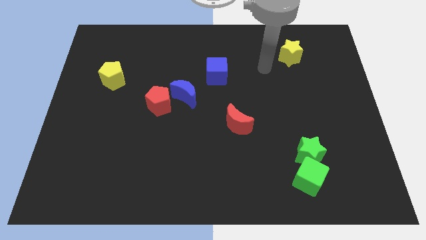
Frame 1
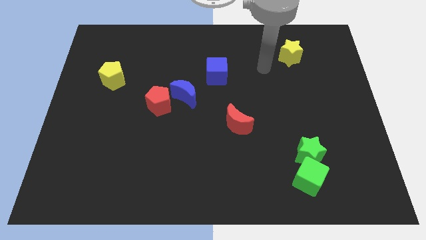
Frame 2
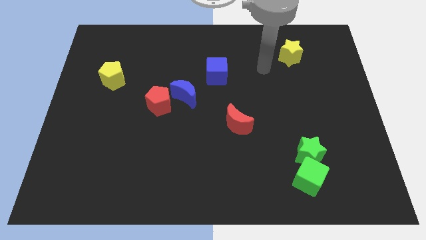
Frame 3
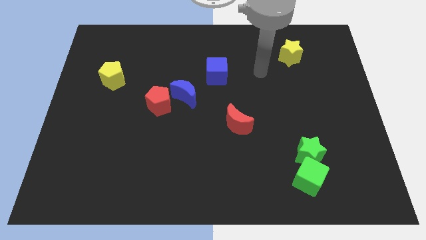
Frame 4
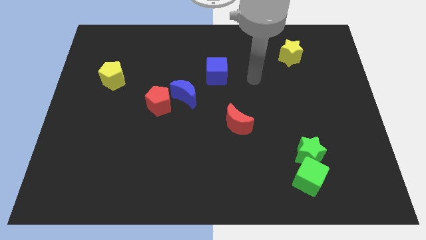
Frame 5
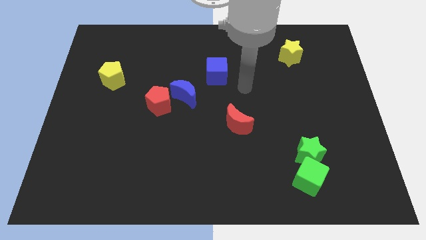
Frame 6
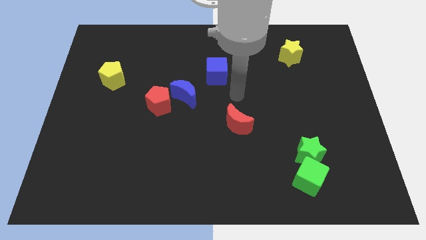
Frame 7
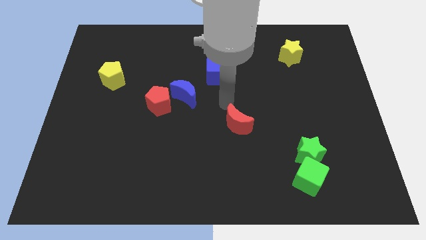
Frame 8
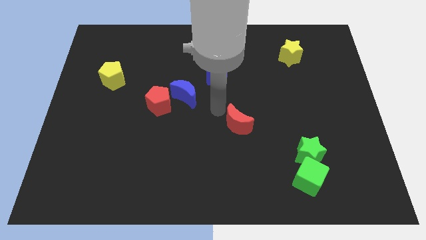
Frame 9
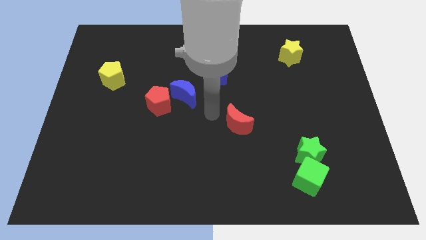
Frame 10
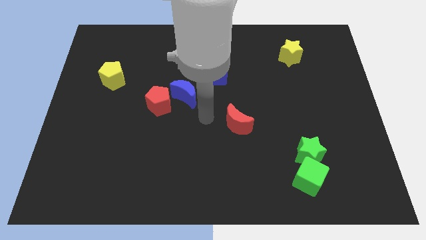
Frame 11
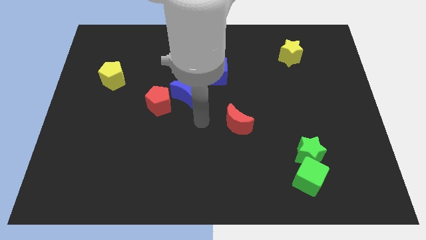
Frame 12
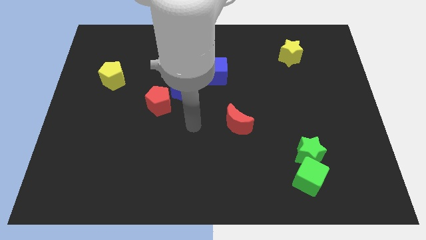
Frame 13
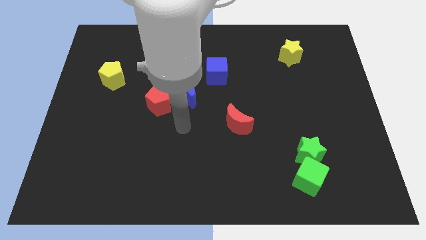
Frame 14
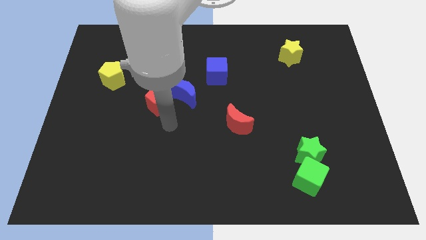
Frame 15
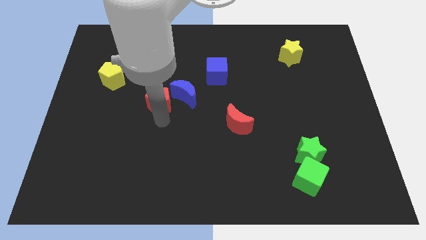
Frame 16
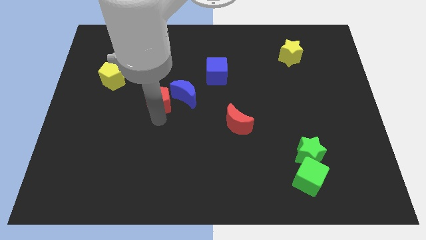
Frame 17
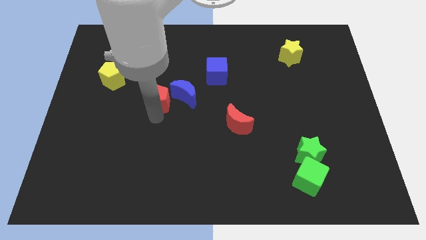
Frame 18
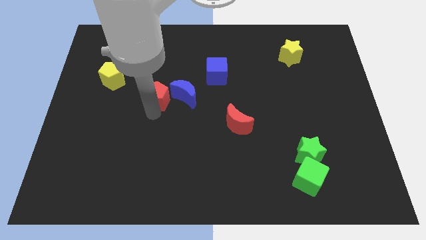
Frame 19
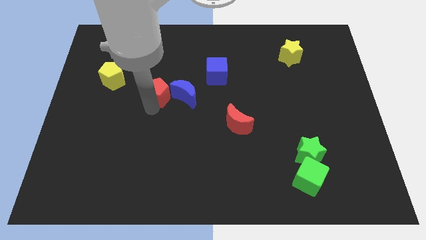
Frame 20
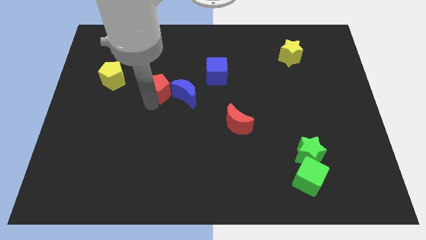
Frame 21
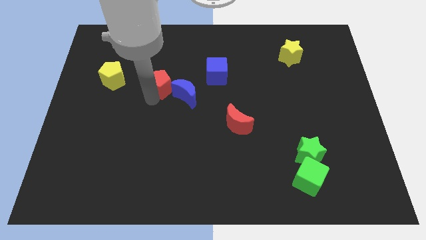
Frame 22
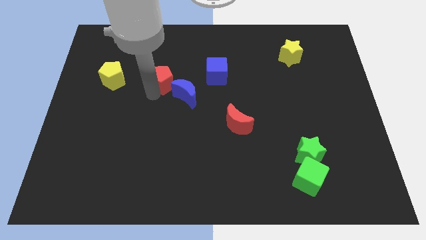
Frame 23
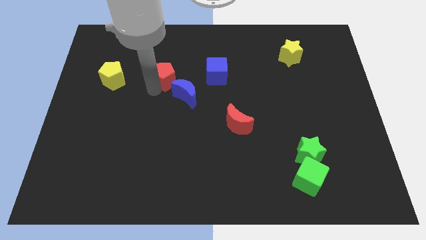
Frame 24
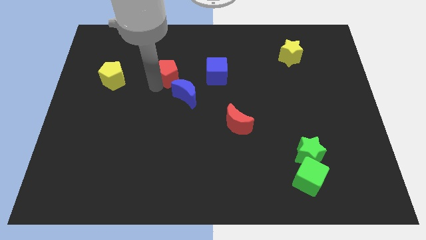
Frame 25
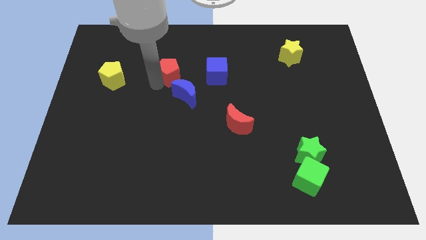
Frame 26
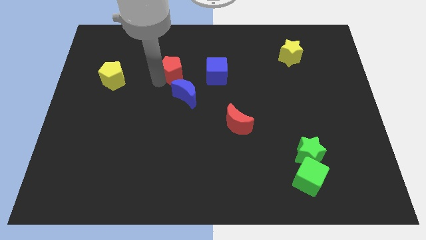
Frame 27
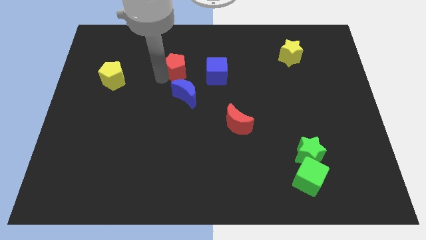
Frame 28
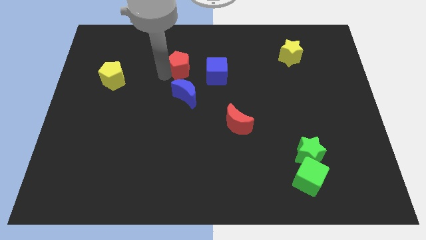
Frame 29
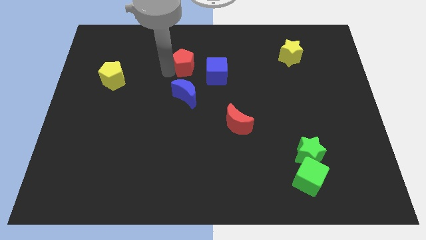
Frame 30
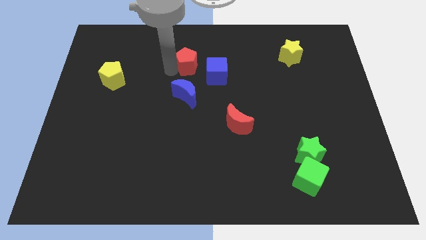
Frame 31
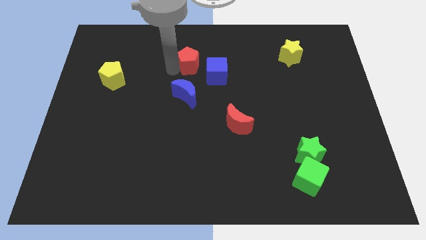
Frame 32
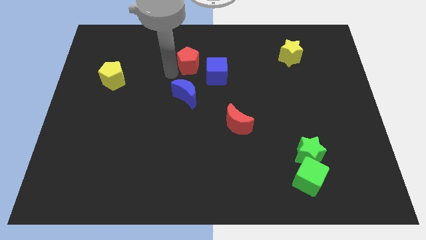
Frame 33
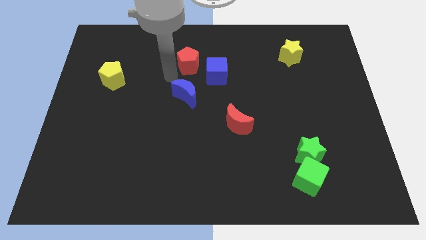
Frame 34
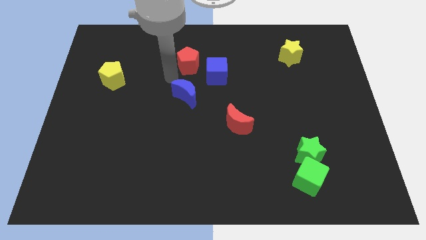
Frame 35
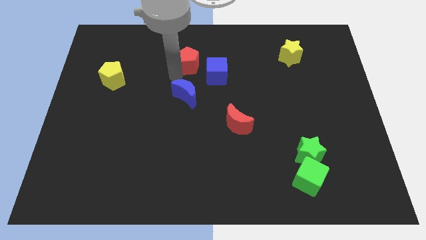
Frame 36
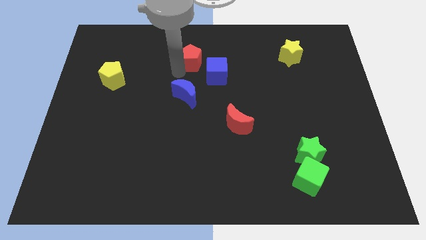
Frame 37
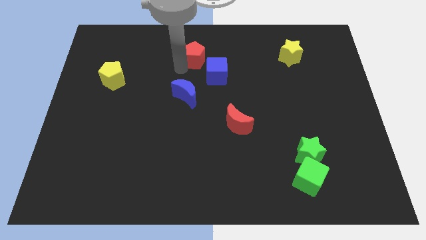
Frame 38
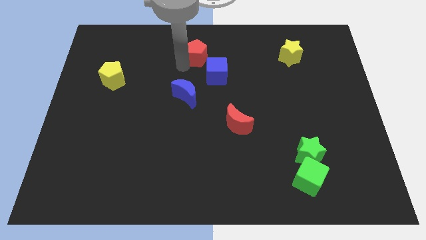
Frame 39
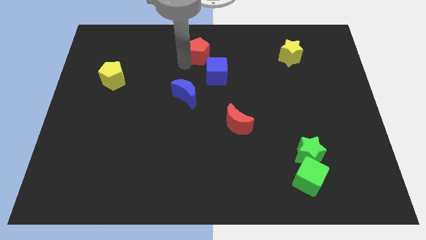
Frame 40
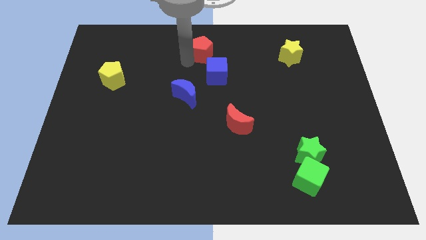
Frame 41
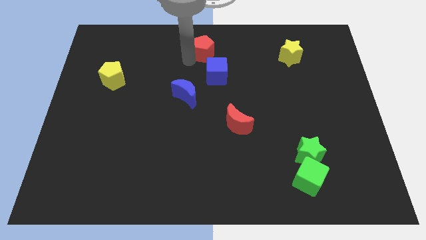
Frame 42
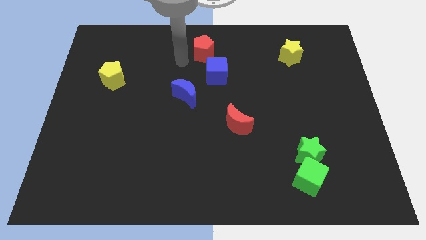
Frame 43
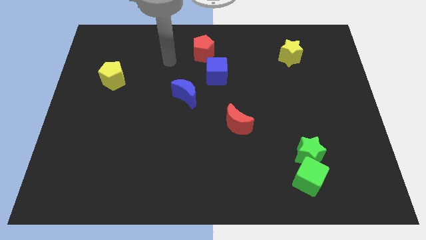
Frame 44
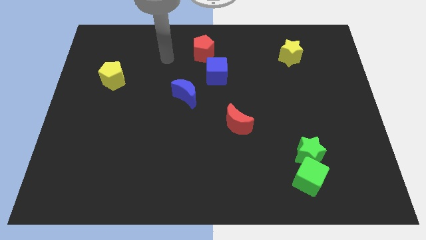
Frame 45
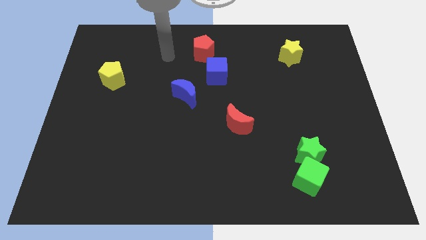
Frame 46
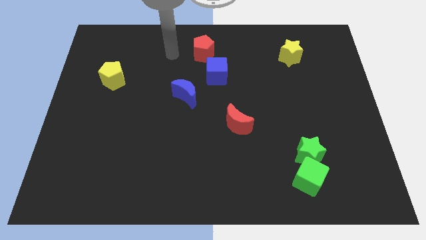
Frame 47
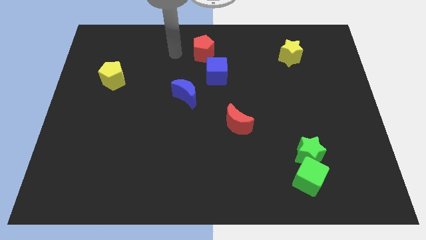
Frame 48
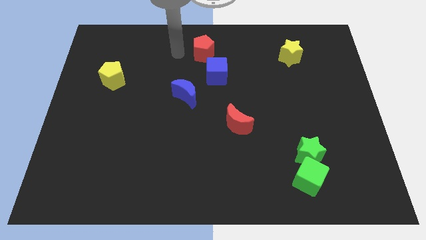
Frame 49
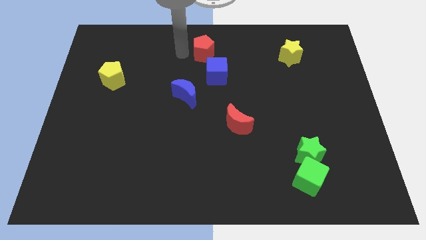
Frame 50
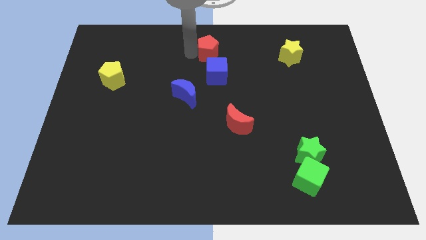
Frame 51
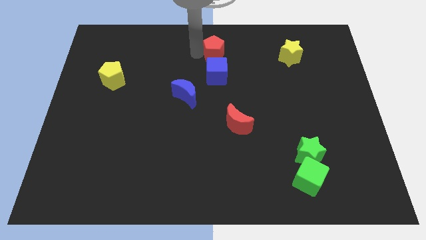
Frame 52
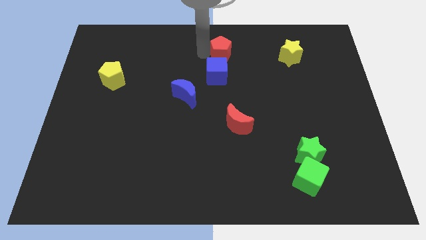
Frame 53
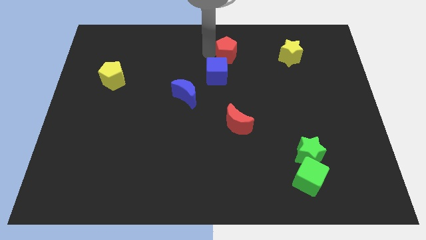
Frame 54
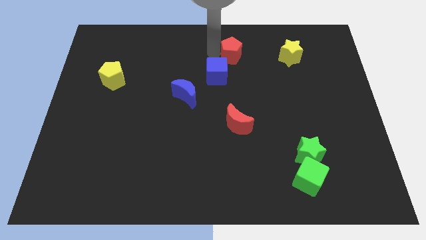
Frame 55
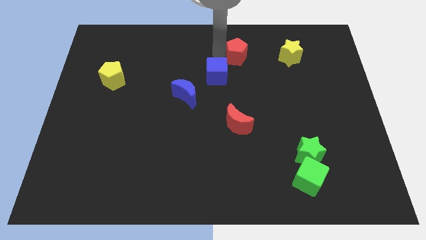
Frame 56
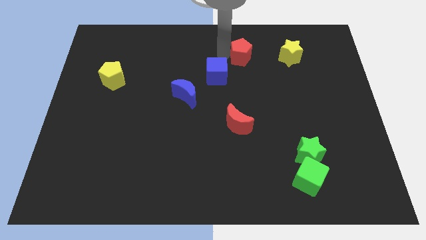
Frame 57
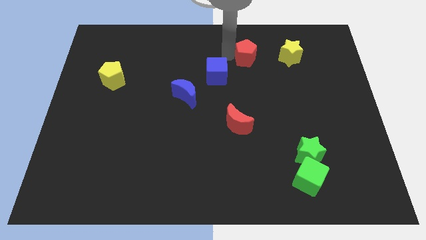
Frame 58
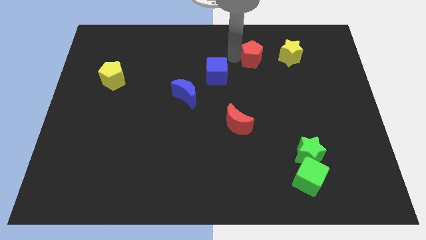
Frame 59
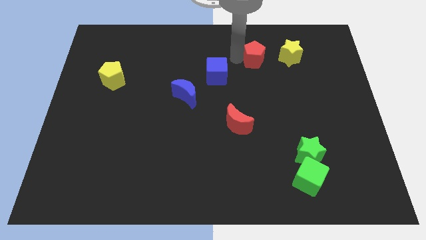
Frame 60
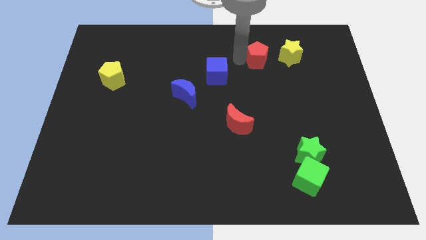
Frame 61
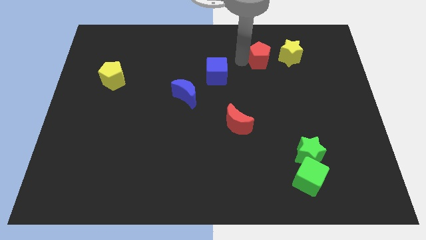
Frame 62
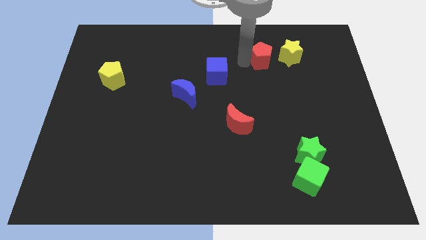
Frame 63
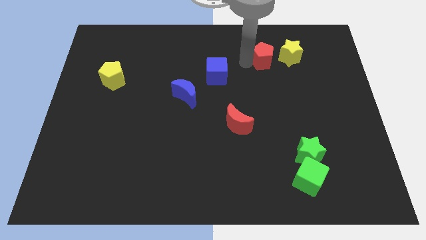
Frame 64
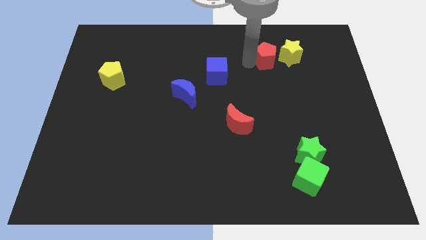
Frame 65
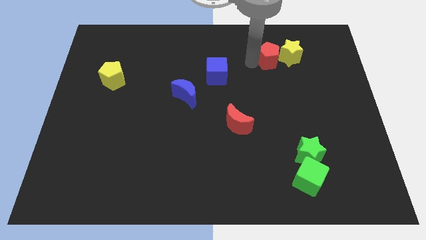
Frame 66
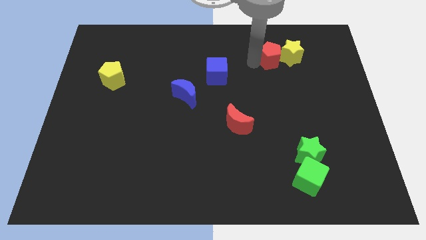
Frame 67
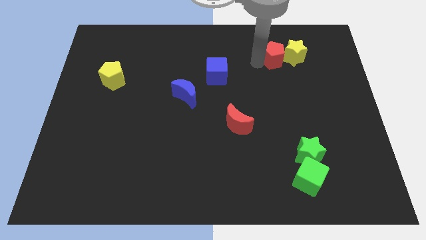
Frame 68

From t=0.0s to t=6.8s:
push the red pentagon to the yellow star

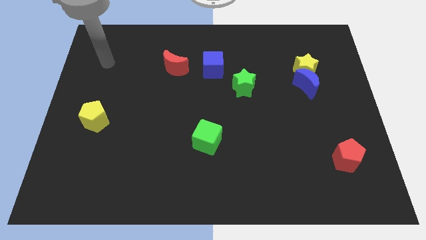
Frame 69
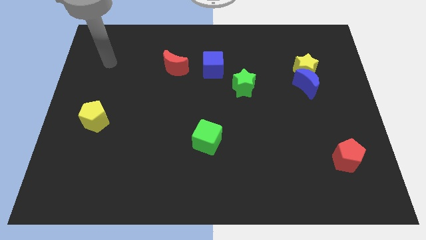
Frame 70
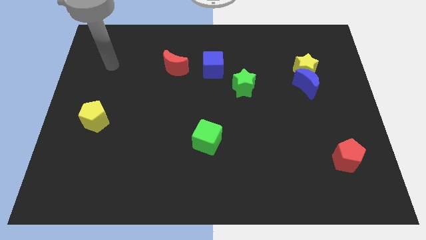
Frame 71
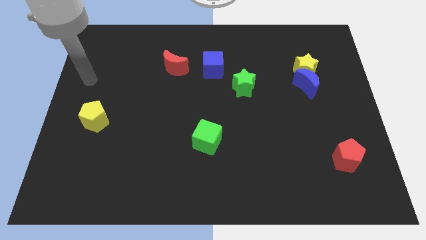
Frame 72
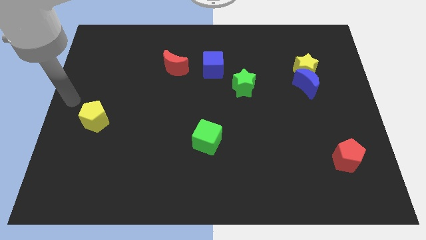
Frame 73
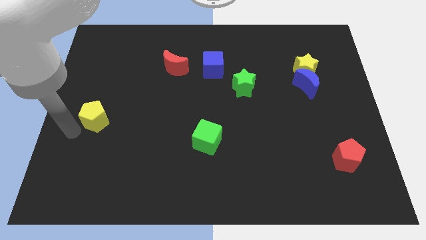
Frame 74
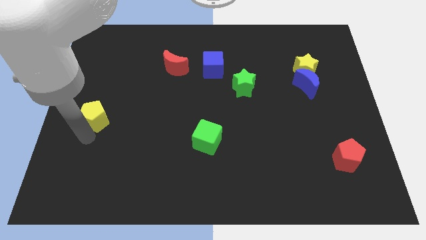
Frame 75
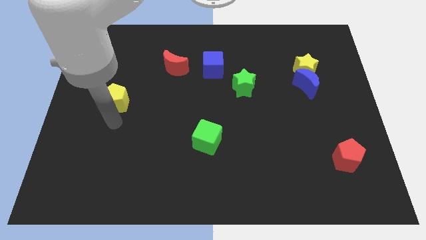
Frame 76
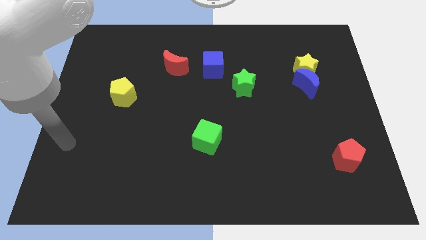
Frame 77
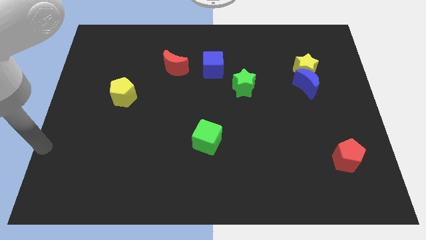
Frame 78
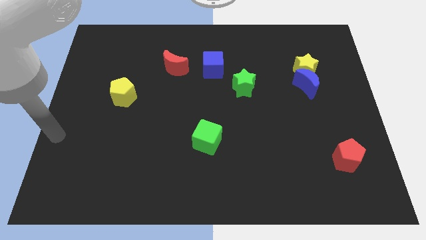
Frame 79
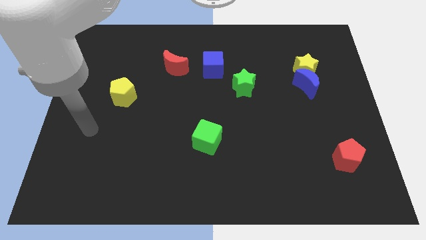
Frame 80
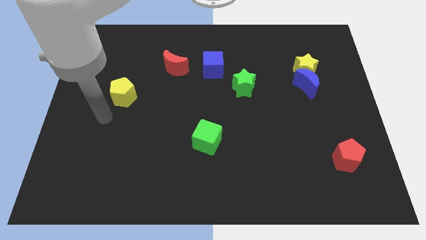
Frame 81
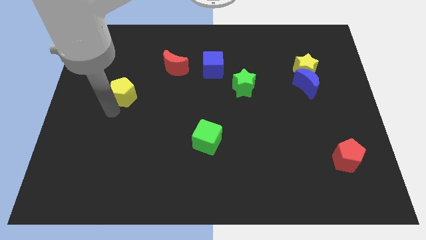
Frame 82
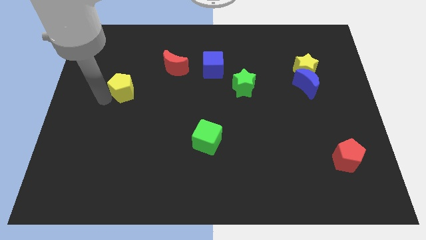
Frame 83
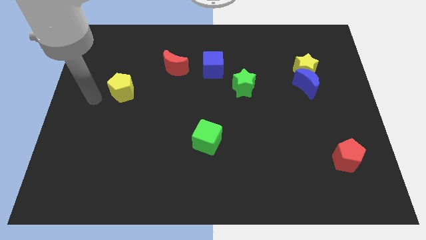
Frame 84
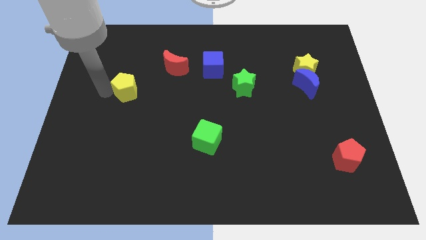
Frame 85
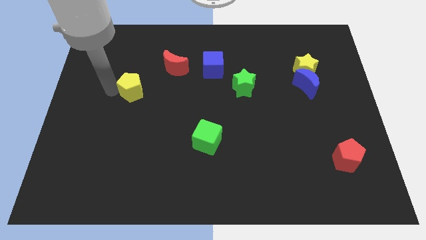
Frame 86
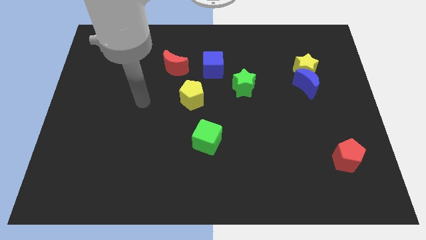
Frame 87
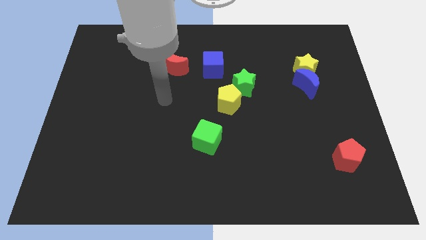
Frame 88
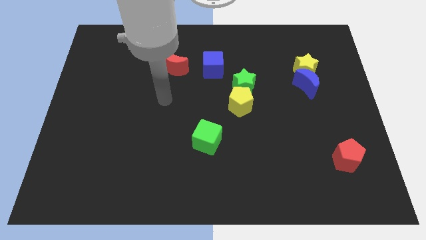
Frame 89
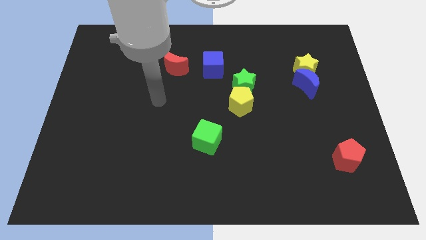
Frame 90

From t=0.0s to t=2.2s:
put the yellow pentagon close to the green star
